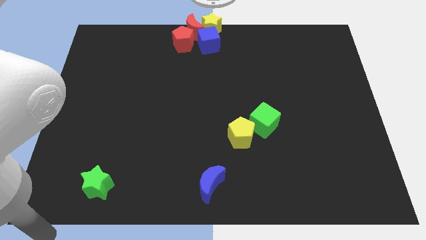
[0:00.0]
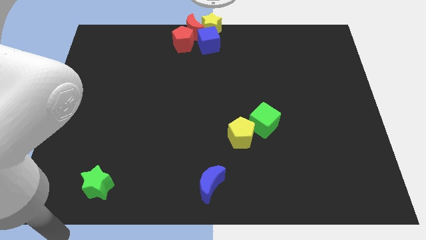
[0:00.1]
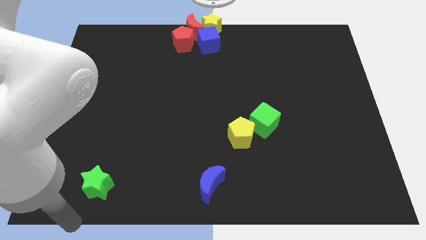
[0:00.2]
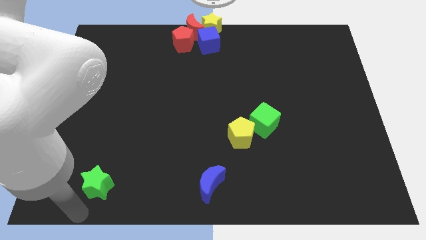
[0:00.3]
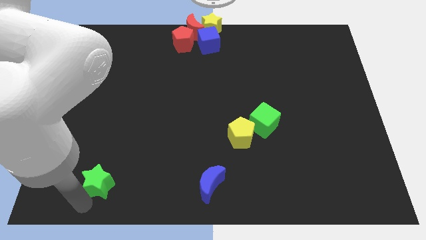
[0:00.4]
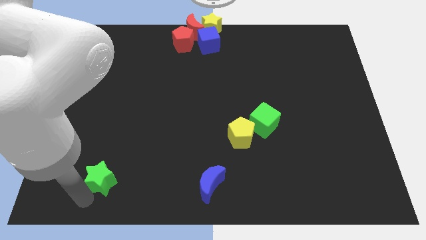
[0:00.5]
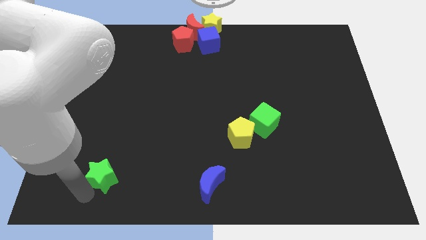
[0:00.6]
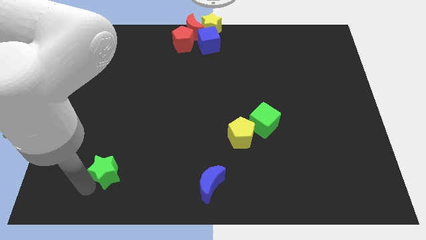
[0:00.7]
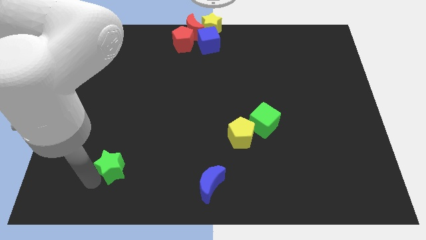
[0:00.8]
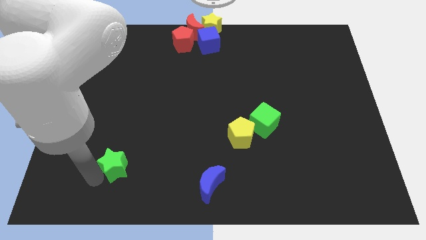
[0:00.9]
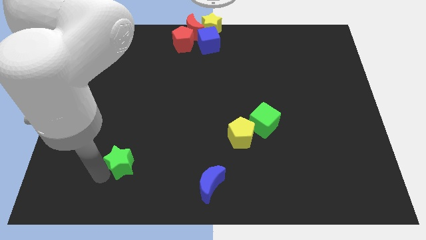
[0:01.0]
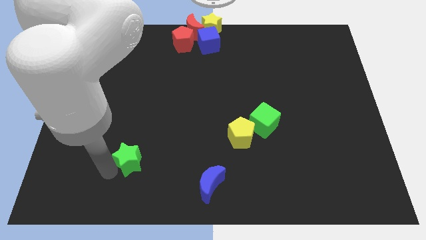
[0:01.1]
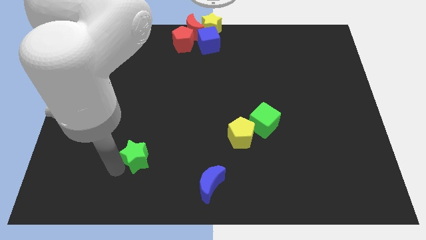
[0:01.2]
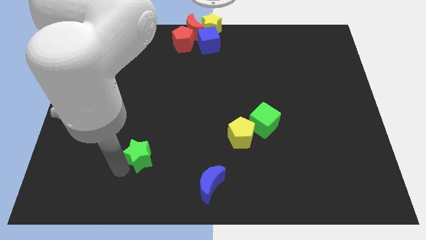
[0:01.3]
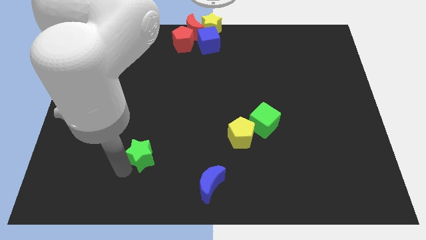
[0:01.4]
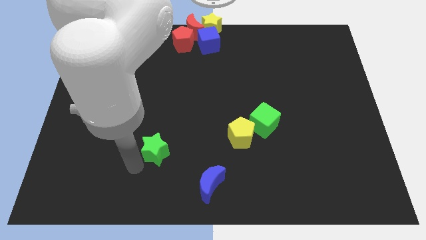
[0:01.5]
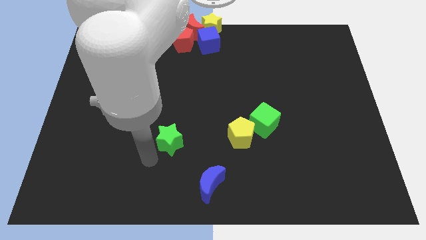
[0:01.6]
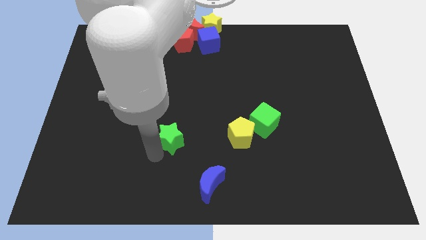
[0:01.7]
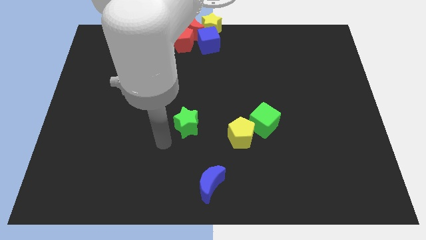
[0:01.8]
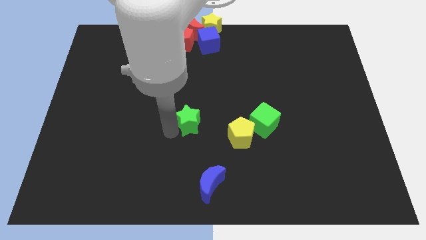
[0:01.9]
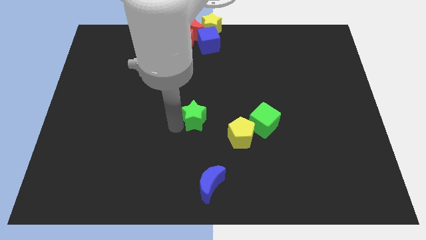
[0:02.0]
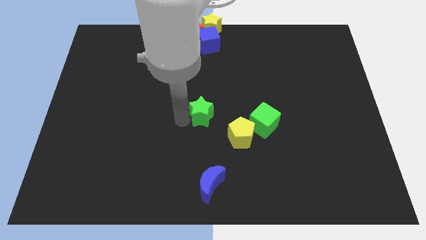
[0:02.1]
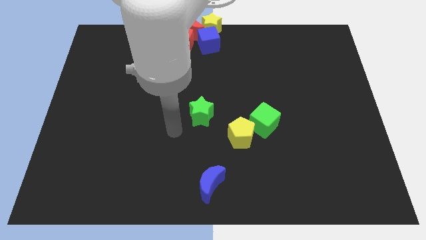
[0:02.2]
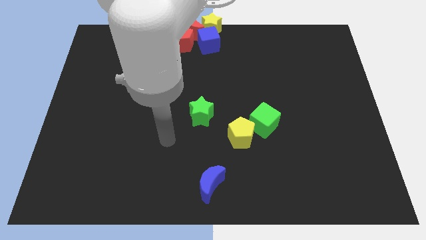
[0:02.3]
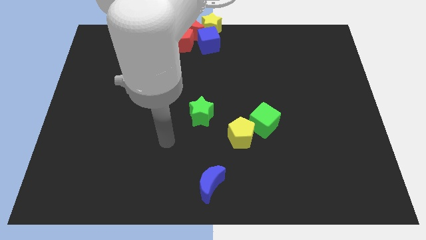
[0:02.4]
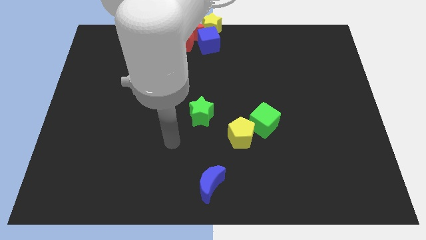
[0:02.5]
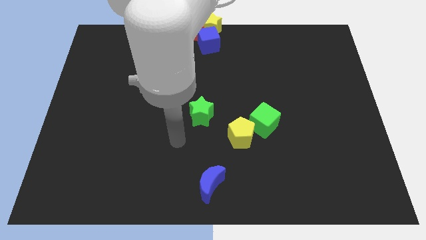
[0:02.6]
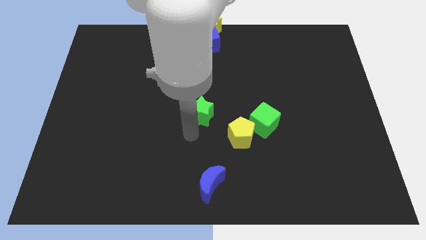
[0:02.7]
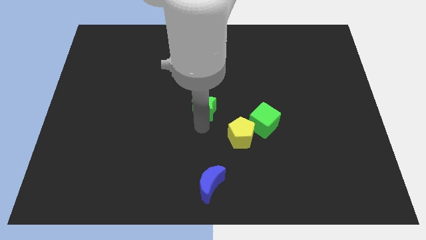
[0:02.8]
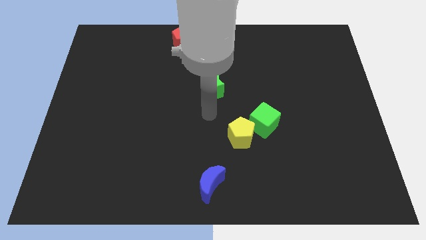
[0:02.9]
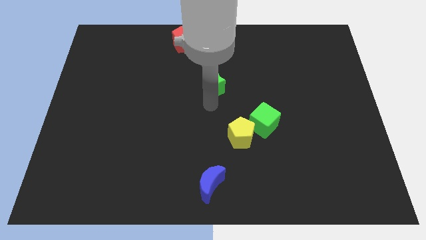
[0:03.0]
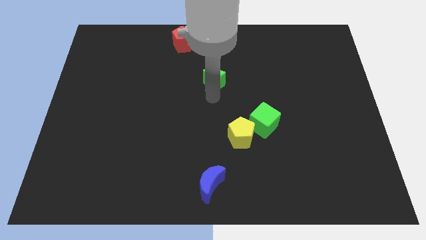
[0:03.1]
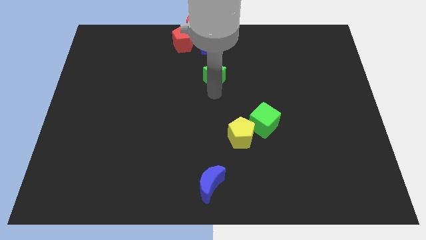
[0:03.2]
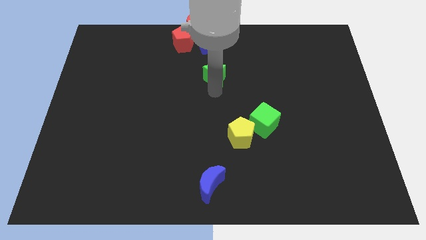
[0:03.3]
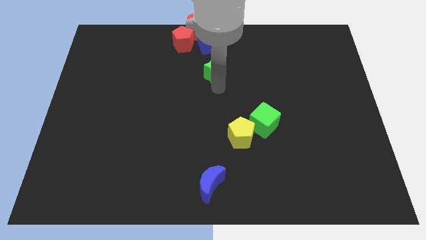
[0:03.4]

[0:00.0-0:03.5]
place the green star down to the blue cube

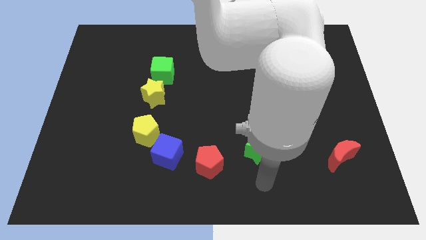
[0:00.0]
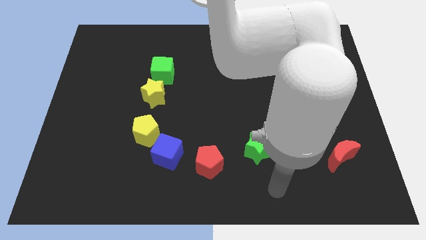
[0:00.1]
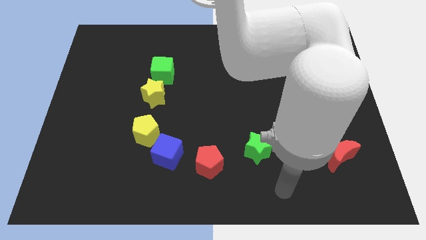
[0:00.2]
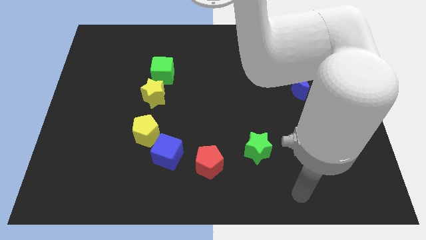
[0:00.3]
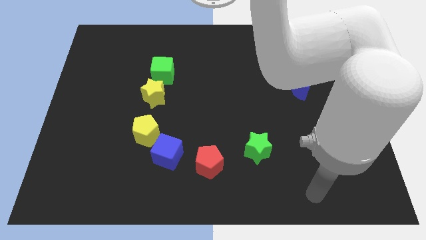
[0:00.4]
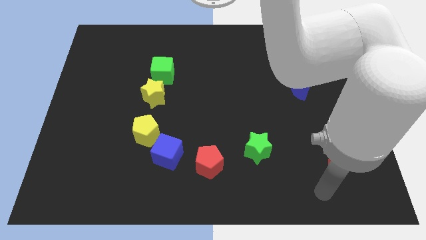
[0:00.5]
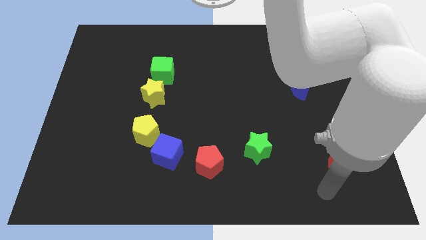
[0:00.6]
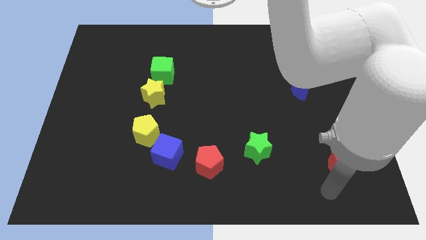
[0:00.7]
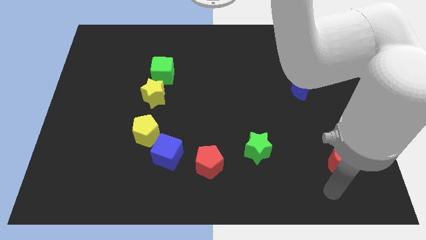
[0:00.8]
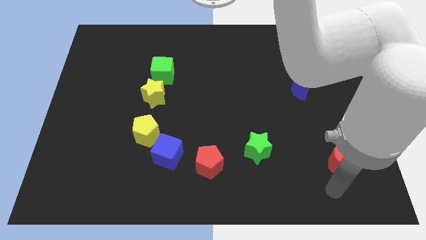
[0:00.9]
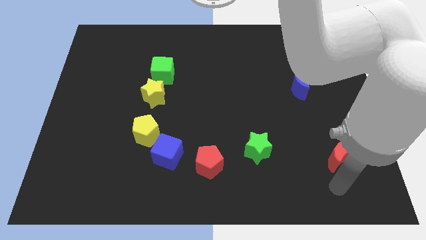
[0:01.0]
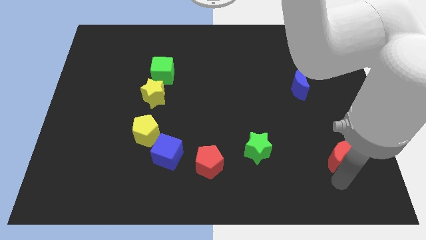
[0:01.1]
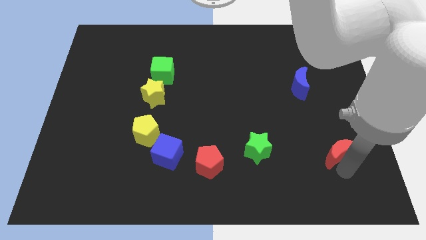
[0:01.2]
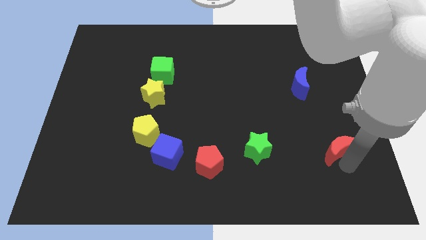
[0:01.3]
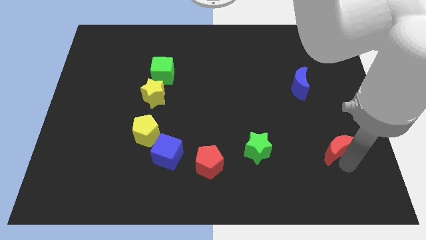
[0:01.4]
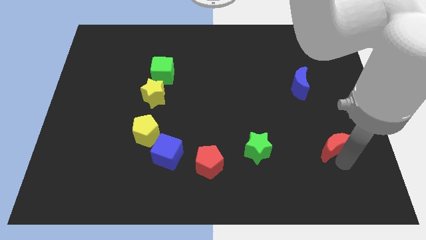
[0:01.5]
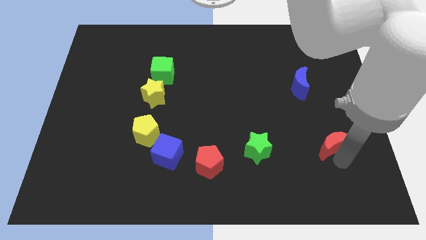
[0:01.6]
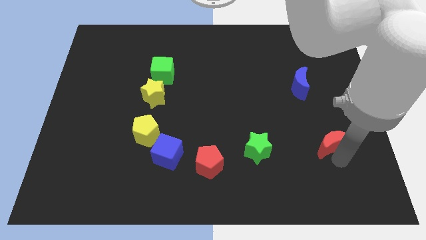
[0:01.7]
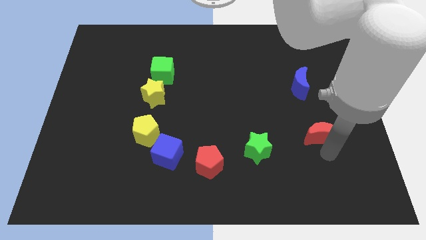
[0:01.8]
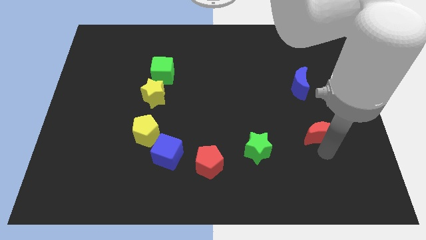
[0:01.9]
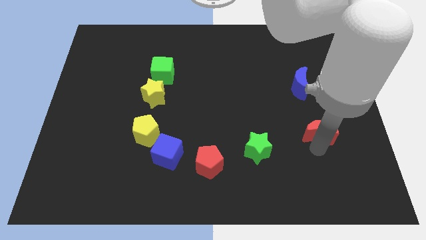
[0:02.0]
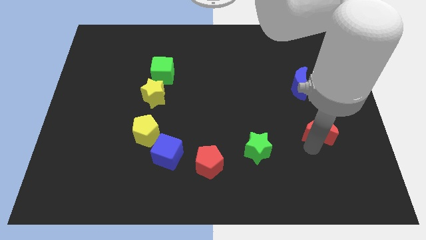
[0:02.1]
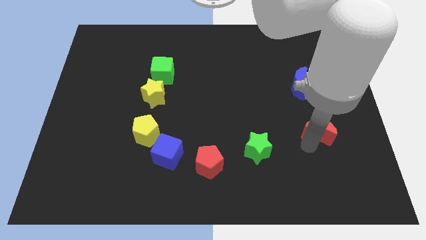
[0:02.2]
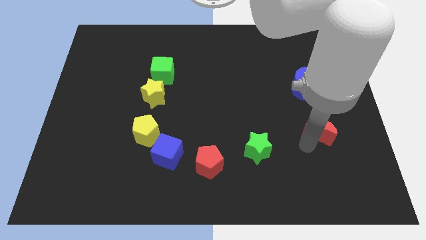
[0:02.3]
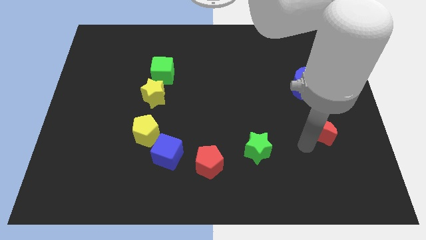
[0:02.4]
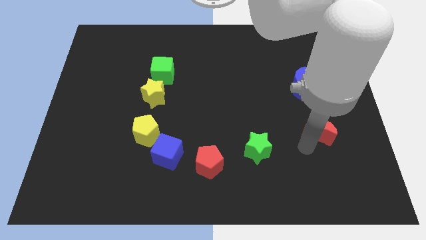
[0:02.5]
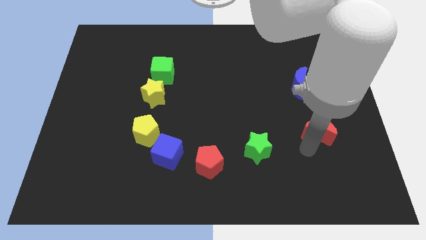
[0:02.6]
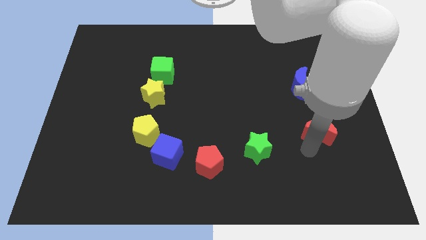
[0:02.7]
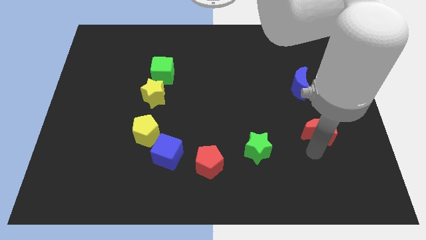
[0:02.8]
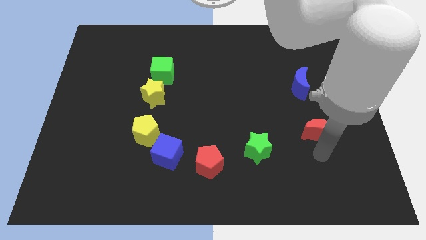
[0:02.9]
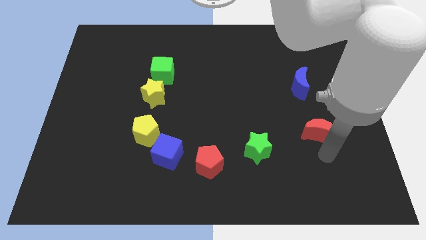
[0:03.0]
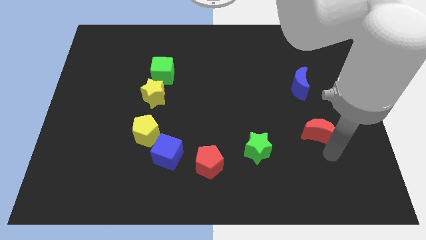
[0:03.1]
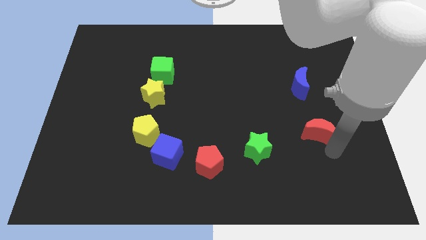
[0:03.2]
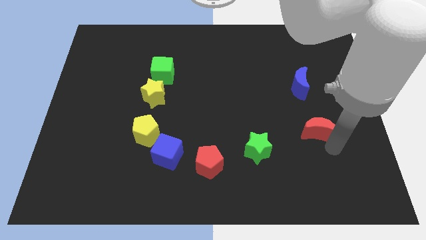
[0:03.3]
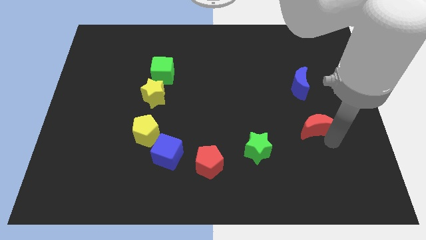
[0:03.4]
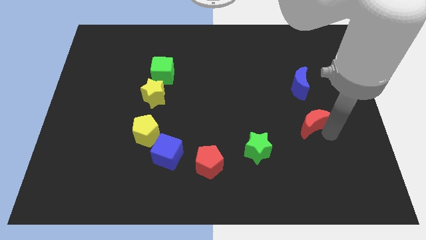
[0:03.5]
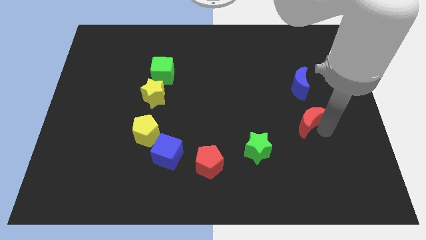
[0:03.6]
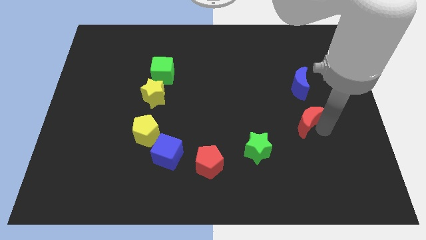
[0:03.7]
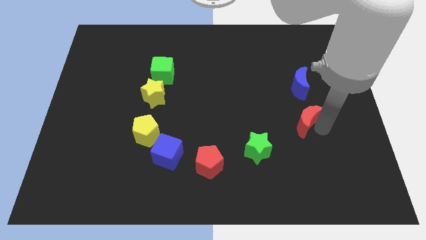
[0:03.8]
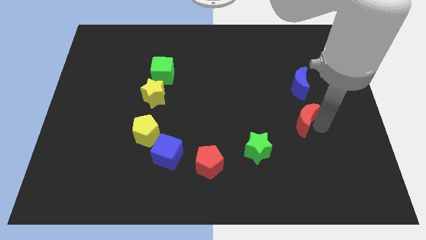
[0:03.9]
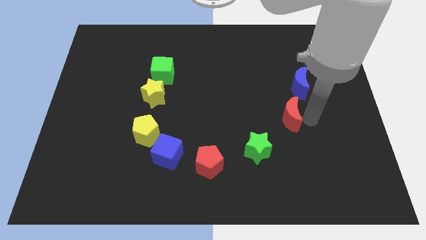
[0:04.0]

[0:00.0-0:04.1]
move the red crescent to the bottom side of the blue moon

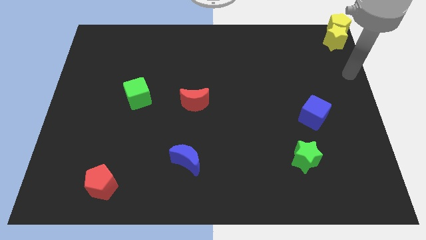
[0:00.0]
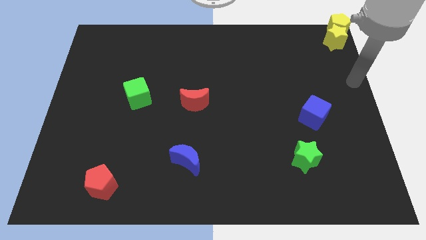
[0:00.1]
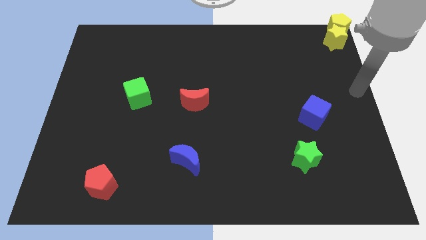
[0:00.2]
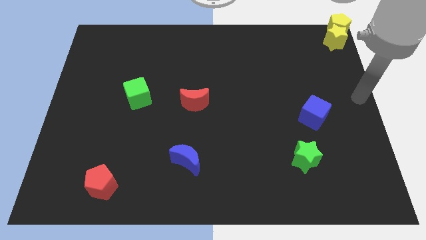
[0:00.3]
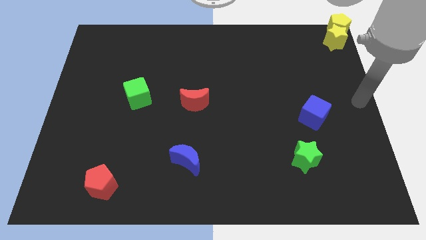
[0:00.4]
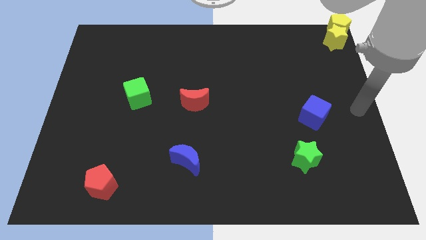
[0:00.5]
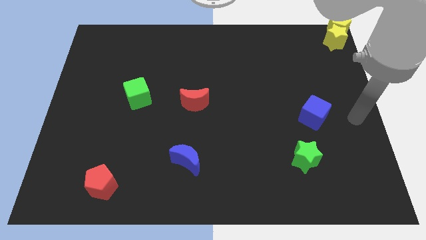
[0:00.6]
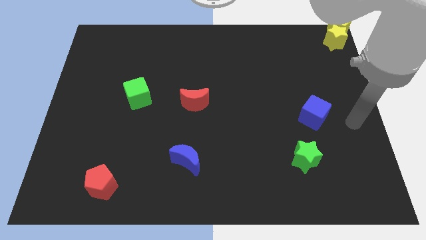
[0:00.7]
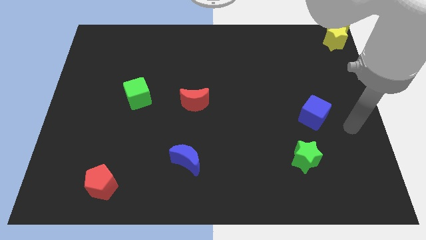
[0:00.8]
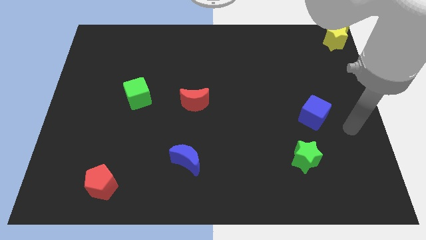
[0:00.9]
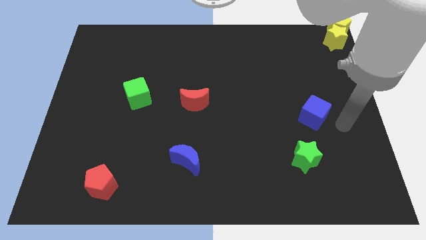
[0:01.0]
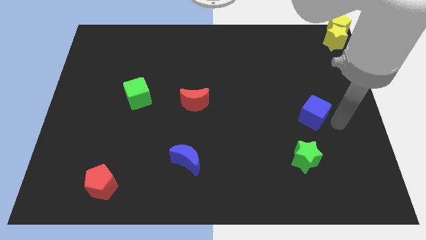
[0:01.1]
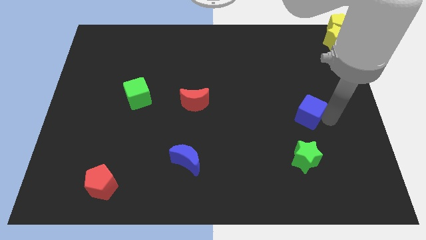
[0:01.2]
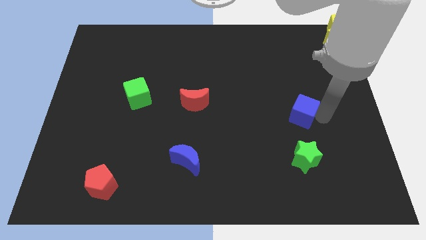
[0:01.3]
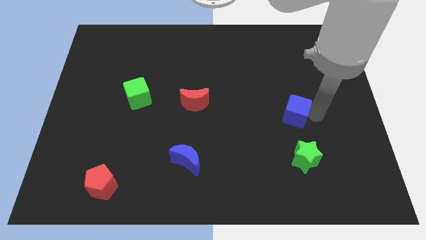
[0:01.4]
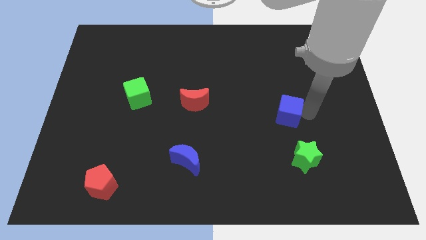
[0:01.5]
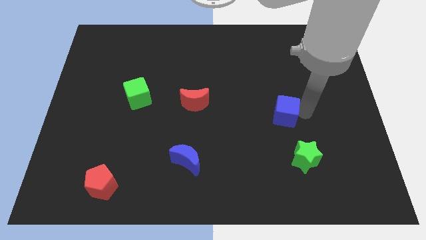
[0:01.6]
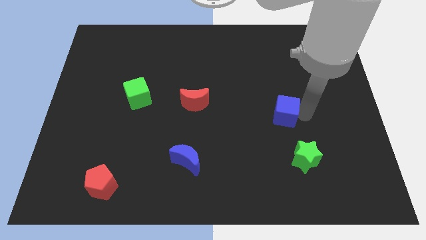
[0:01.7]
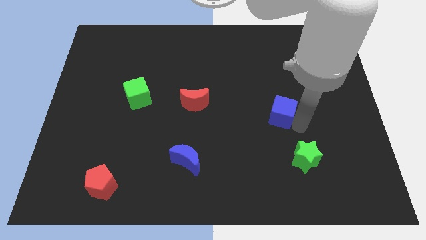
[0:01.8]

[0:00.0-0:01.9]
move the blue cube to the top left of the green star
